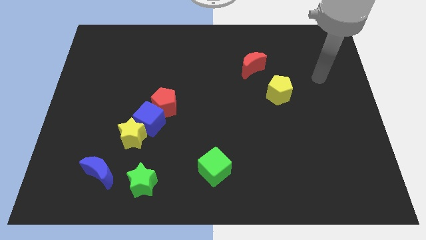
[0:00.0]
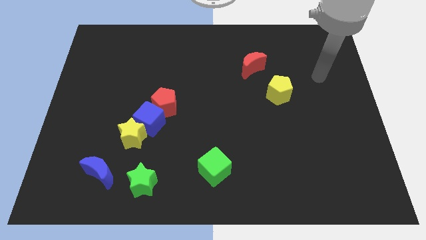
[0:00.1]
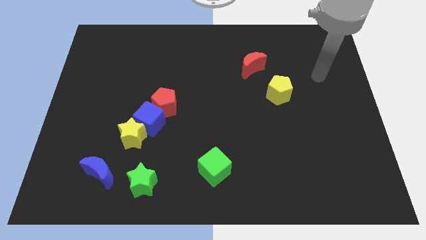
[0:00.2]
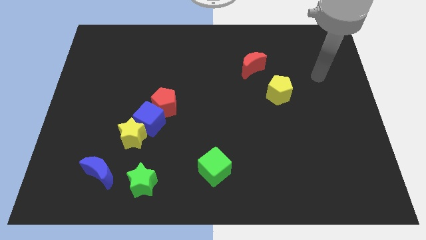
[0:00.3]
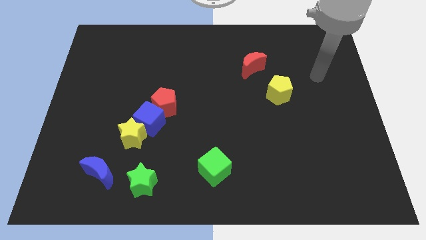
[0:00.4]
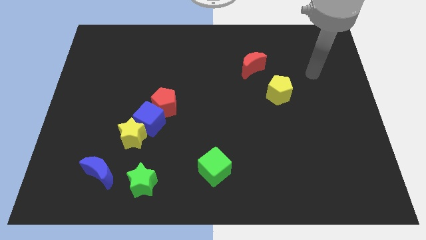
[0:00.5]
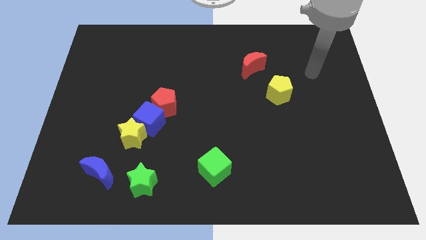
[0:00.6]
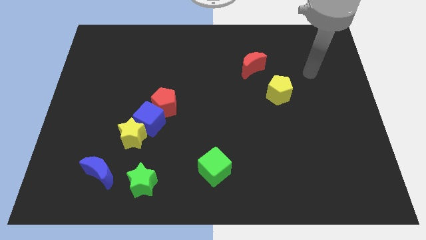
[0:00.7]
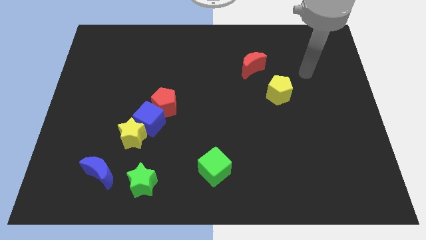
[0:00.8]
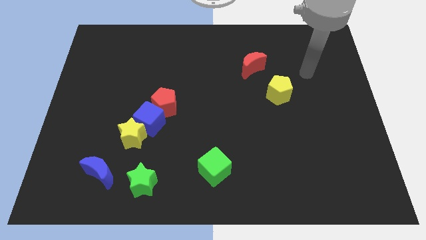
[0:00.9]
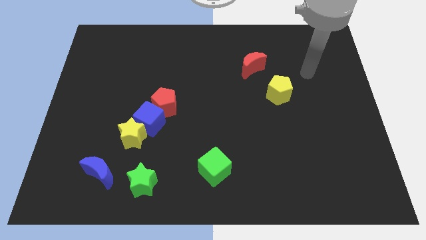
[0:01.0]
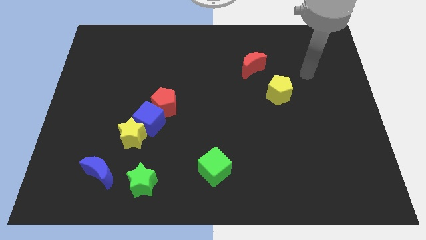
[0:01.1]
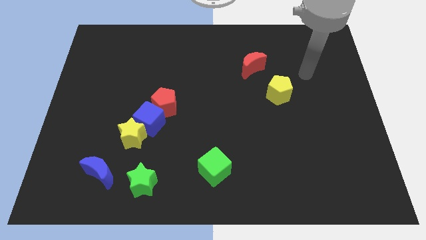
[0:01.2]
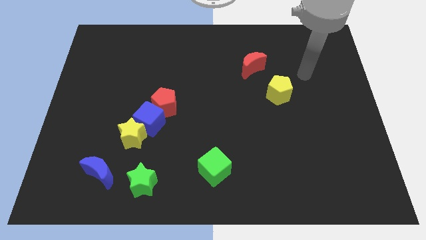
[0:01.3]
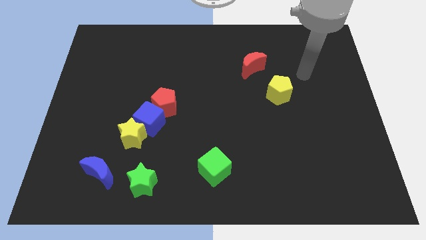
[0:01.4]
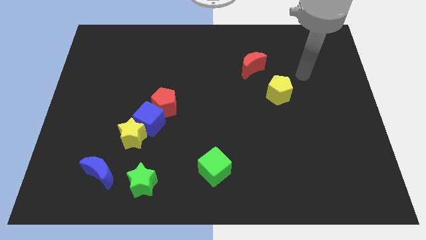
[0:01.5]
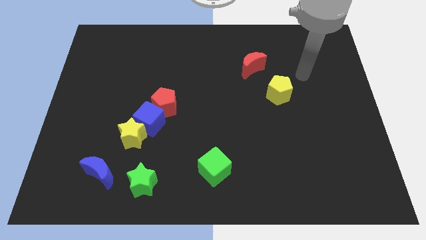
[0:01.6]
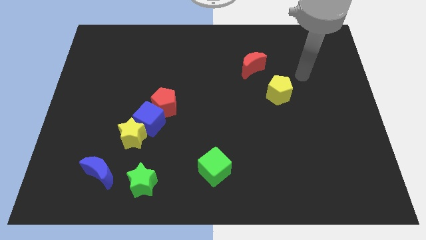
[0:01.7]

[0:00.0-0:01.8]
point your hand at the top right of the yellow pentagon

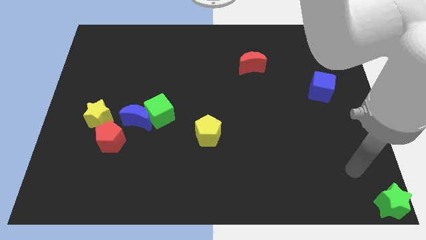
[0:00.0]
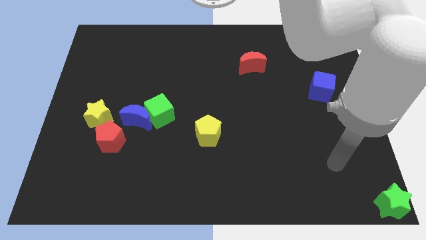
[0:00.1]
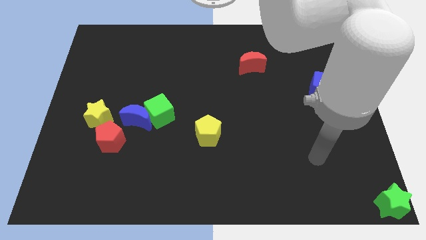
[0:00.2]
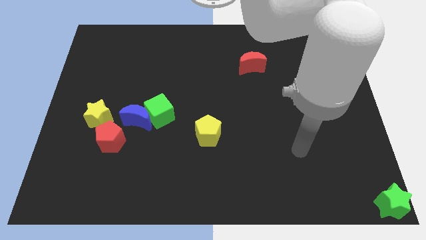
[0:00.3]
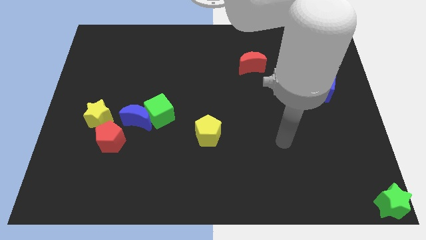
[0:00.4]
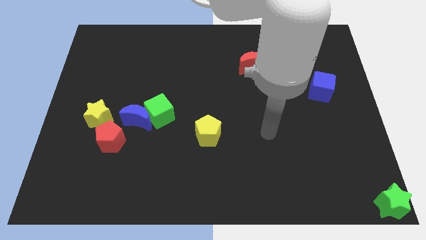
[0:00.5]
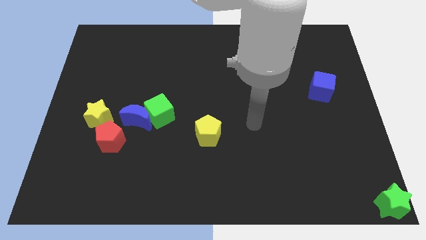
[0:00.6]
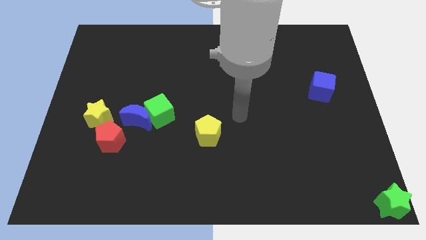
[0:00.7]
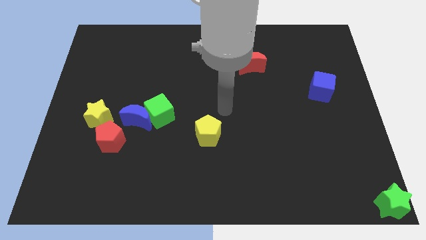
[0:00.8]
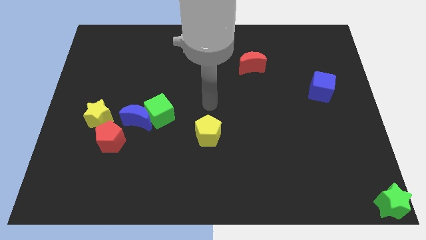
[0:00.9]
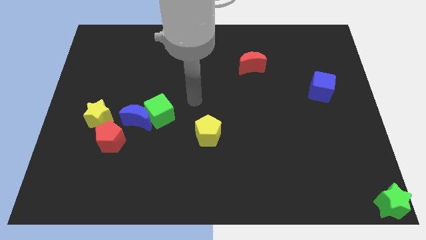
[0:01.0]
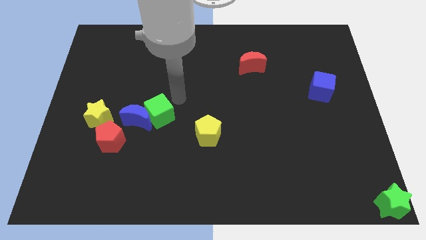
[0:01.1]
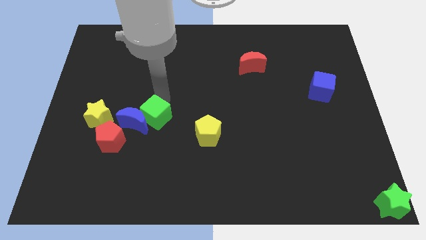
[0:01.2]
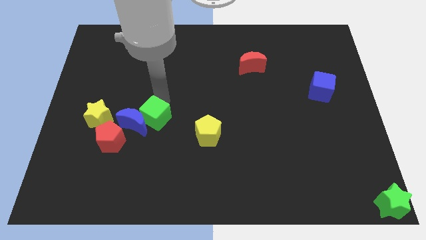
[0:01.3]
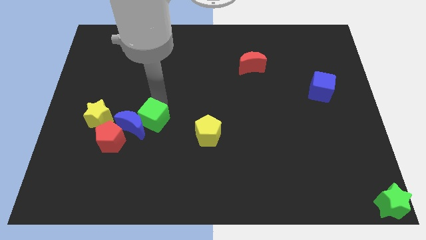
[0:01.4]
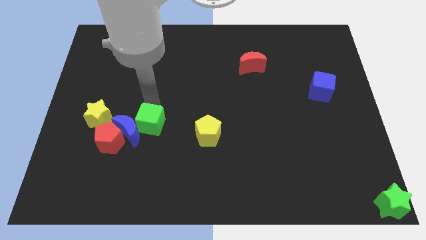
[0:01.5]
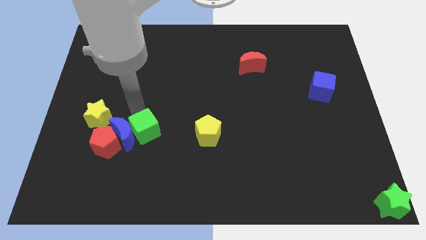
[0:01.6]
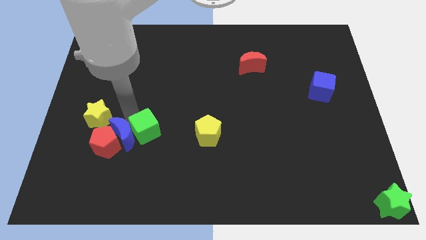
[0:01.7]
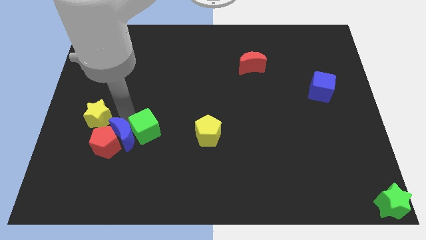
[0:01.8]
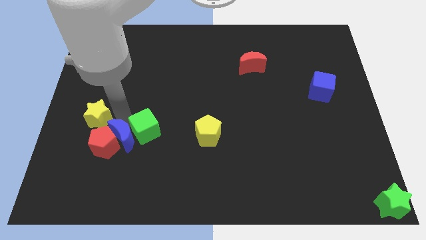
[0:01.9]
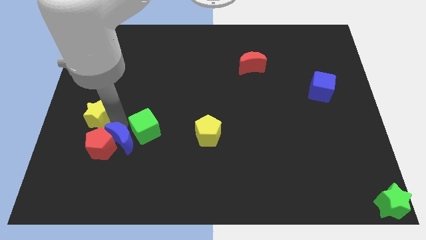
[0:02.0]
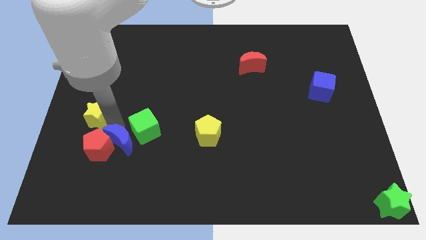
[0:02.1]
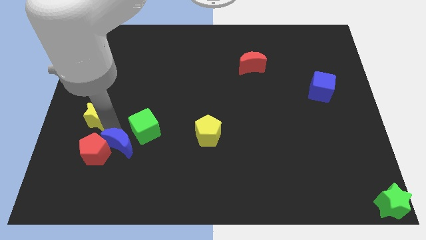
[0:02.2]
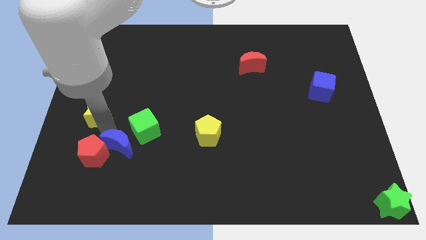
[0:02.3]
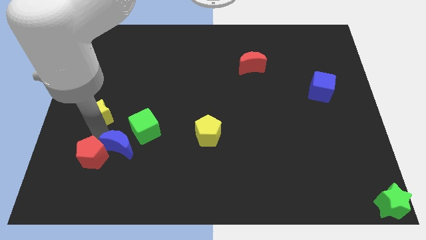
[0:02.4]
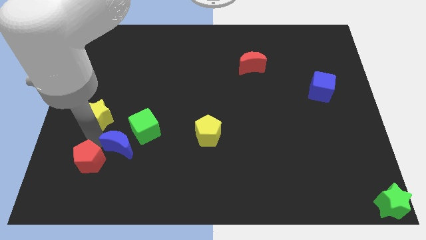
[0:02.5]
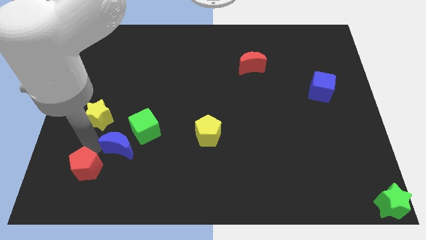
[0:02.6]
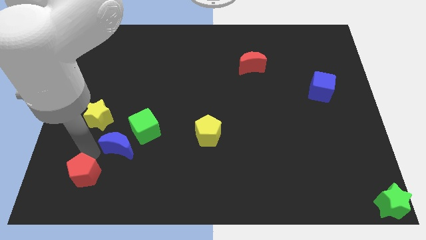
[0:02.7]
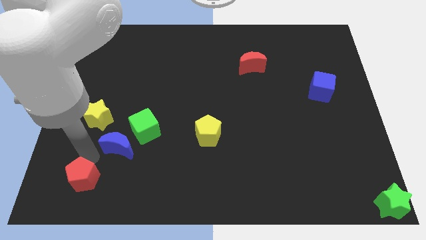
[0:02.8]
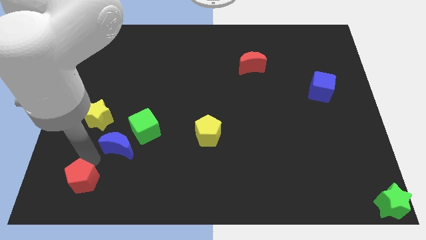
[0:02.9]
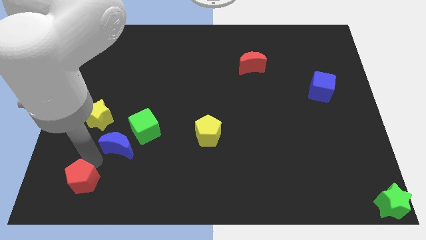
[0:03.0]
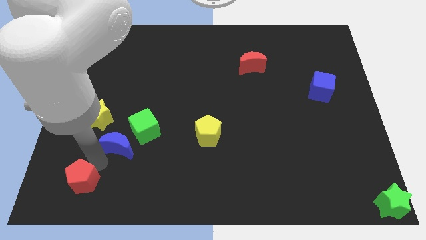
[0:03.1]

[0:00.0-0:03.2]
separate the green cube from the blue moon

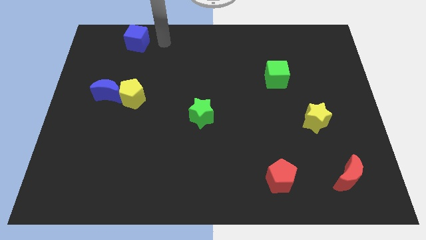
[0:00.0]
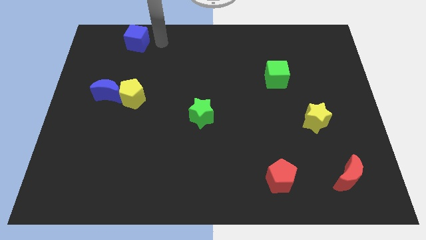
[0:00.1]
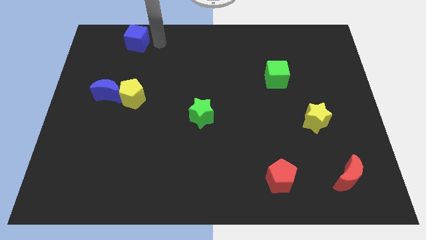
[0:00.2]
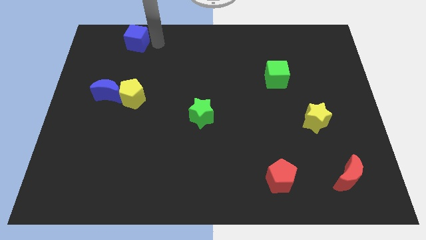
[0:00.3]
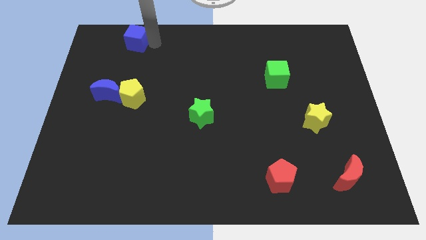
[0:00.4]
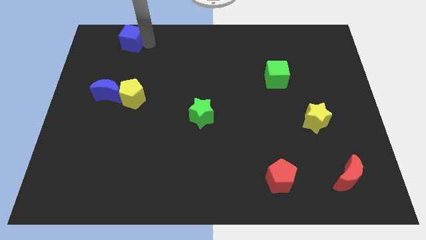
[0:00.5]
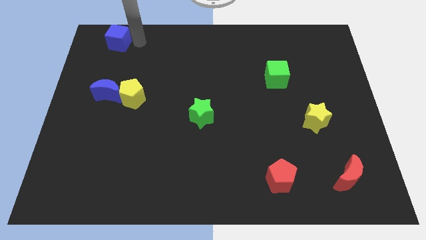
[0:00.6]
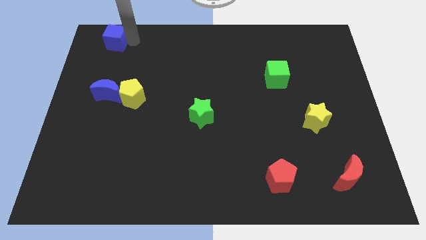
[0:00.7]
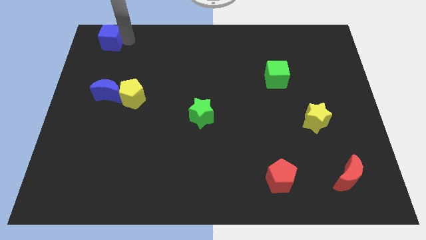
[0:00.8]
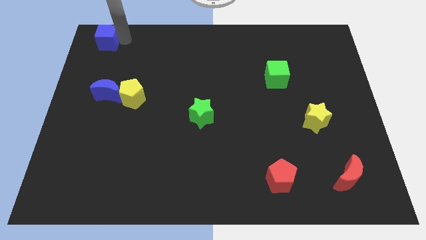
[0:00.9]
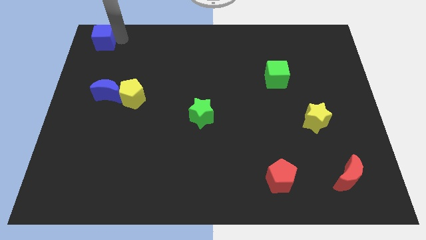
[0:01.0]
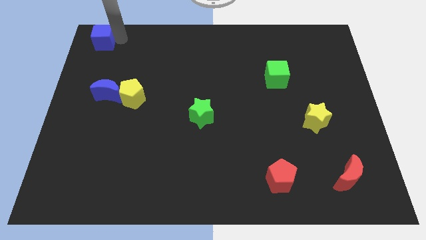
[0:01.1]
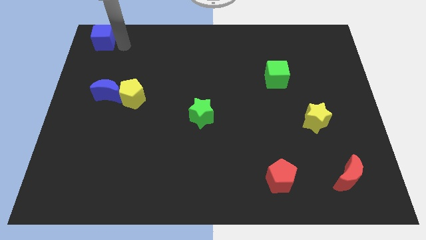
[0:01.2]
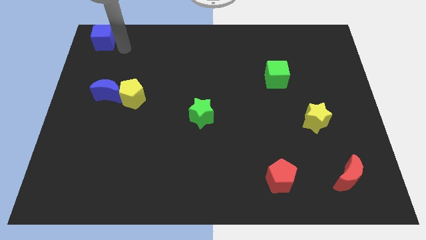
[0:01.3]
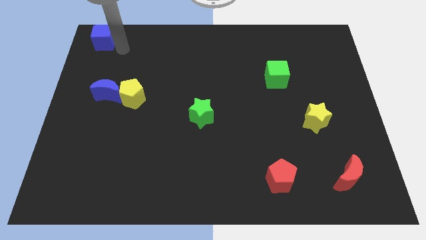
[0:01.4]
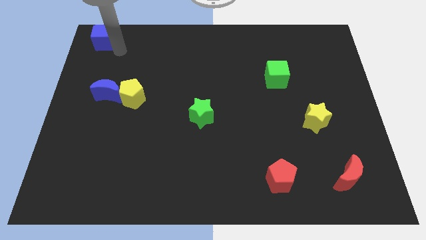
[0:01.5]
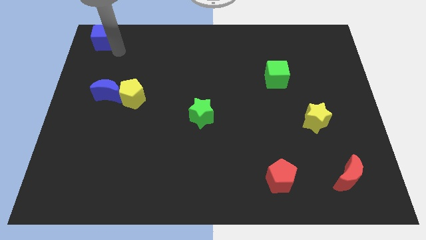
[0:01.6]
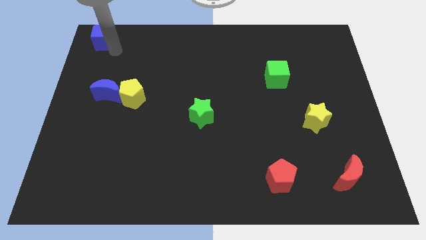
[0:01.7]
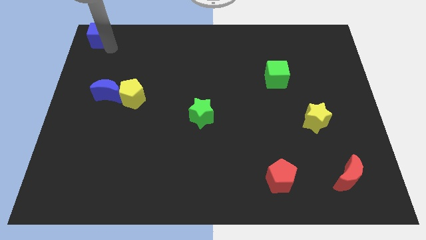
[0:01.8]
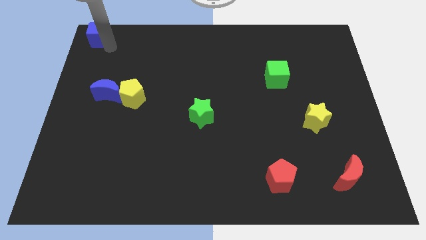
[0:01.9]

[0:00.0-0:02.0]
slide the blue cube to the top left corner

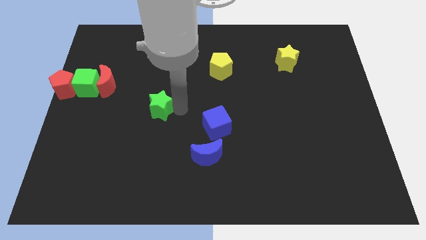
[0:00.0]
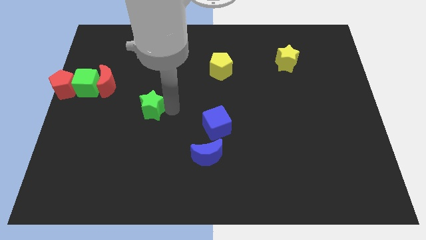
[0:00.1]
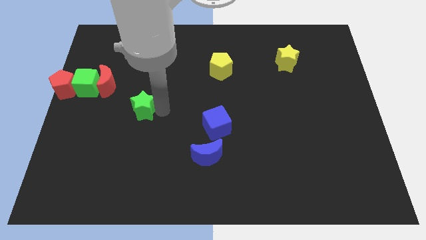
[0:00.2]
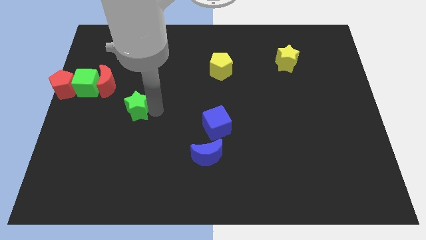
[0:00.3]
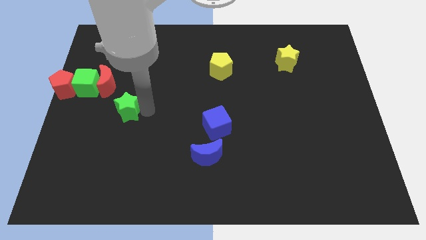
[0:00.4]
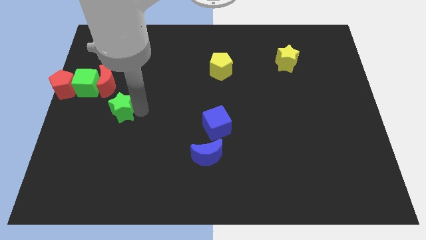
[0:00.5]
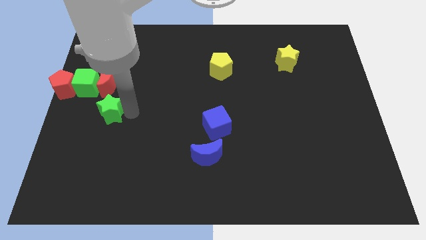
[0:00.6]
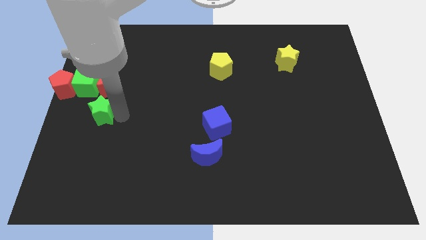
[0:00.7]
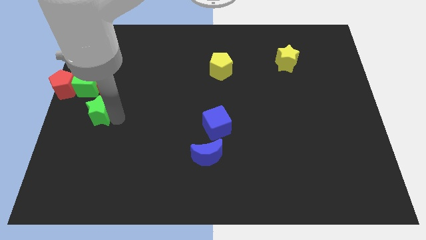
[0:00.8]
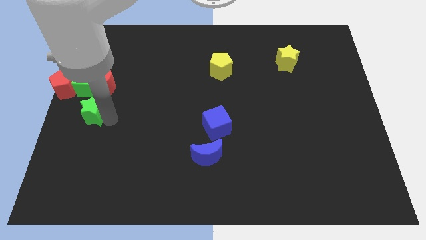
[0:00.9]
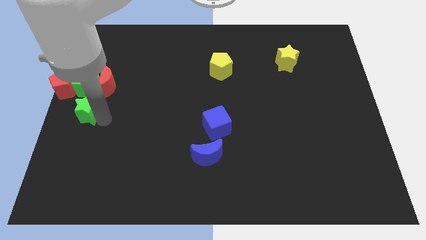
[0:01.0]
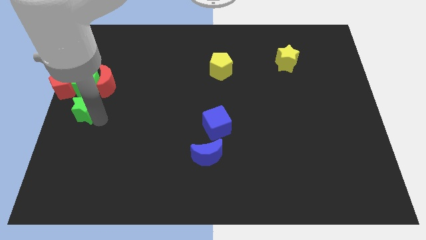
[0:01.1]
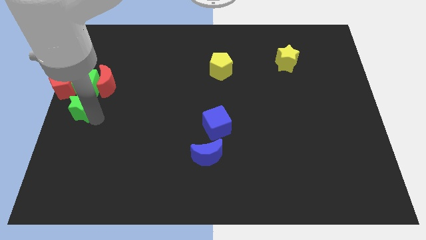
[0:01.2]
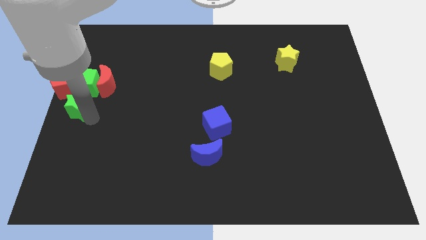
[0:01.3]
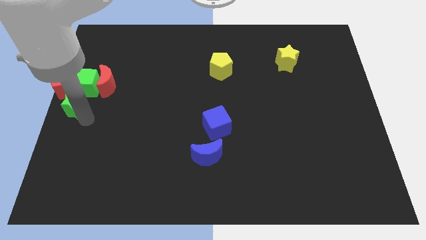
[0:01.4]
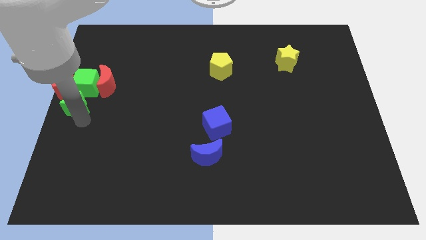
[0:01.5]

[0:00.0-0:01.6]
push the green star to the center left

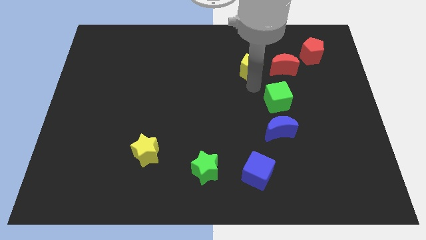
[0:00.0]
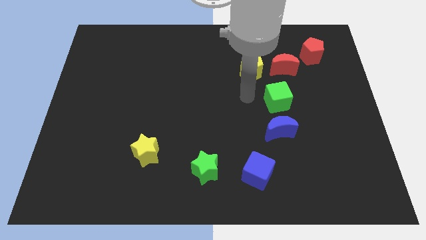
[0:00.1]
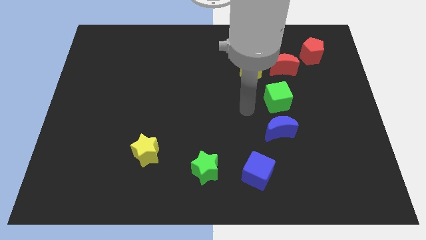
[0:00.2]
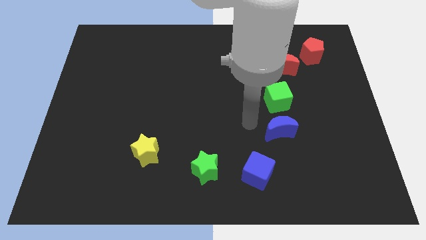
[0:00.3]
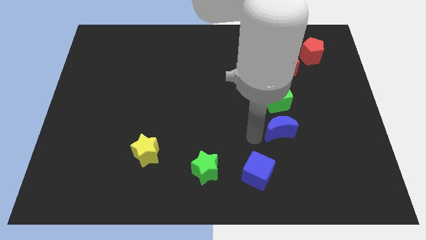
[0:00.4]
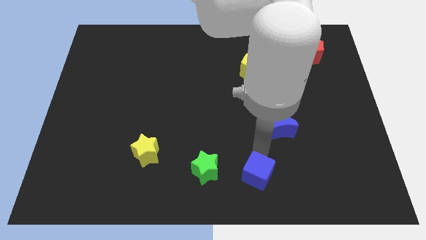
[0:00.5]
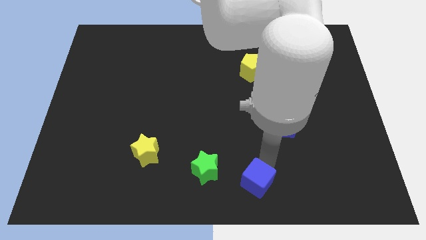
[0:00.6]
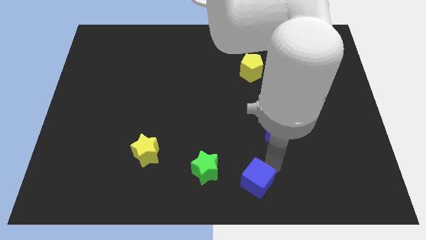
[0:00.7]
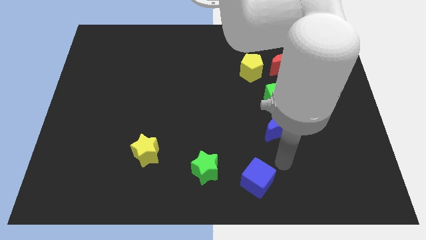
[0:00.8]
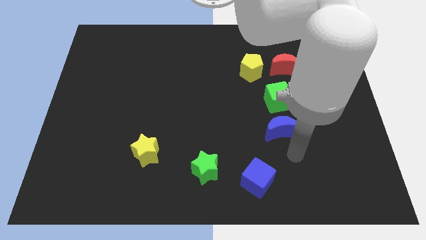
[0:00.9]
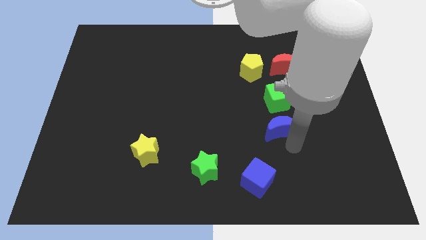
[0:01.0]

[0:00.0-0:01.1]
touch the blue cube
